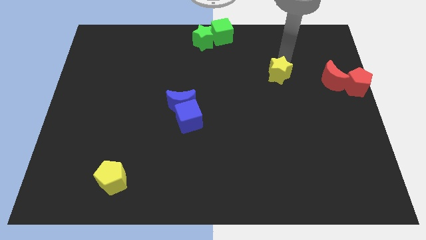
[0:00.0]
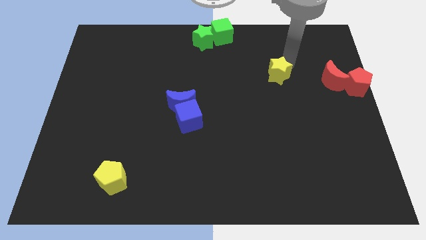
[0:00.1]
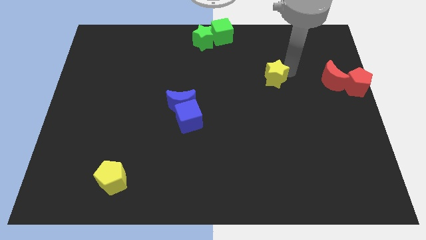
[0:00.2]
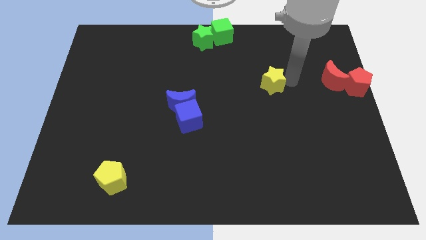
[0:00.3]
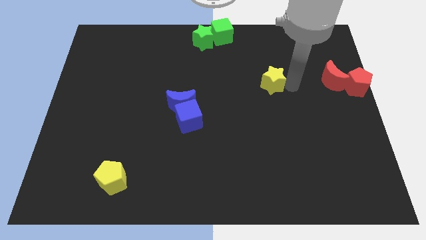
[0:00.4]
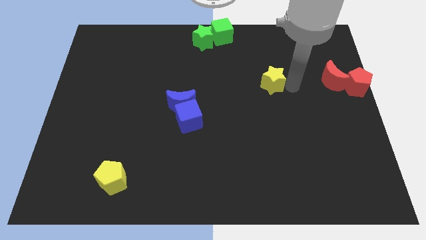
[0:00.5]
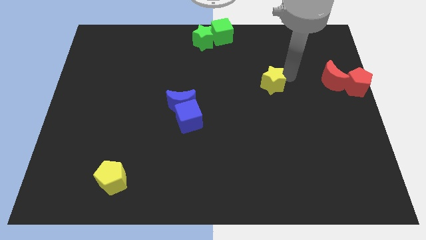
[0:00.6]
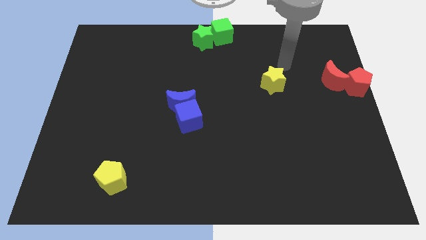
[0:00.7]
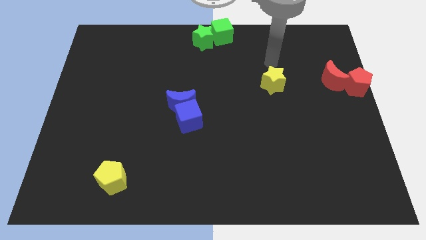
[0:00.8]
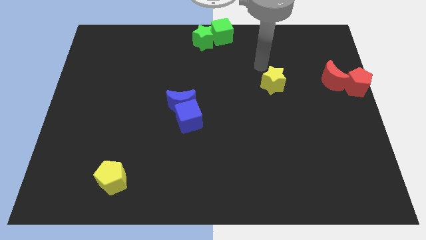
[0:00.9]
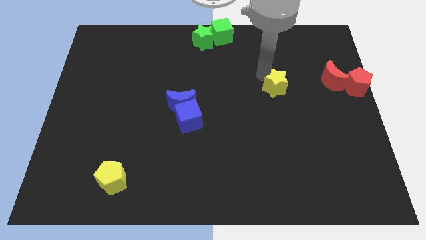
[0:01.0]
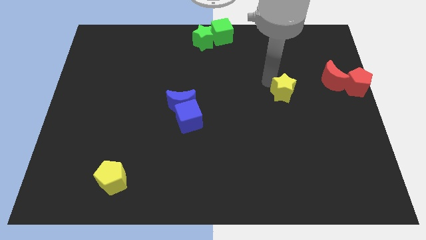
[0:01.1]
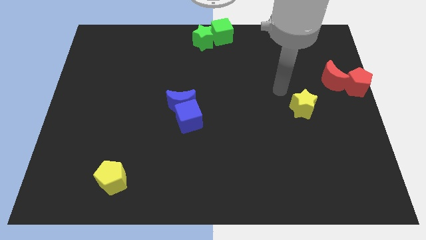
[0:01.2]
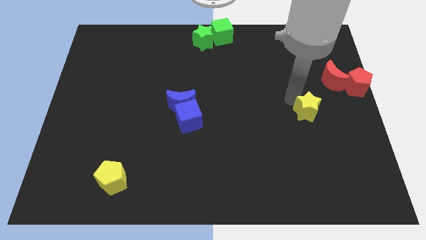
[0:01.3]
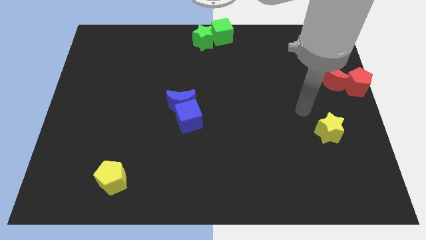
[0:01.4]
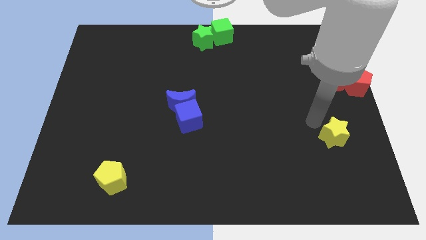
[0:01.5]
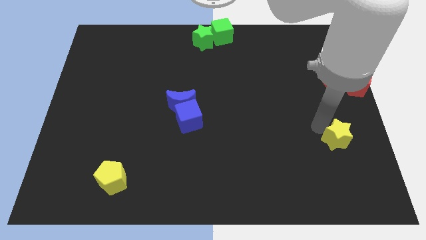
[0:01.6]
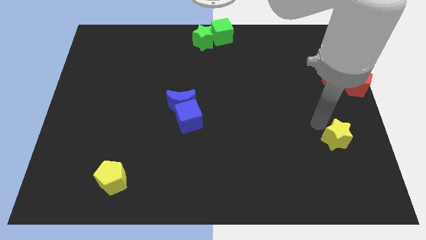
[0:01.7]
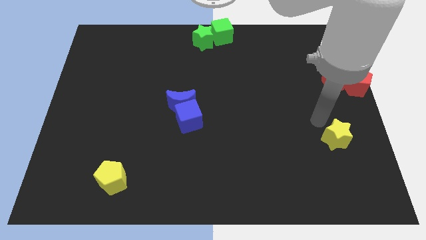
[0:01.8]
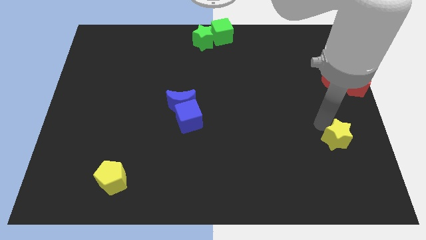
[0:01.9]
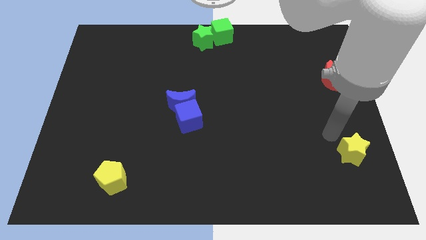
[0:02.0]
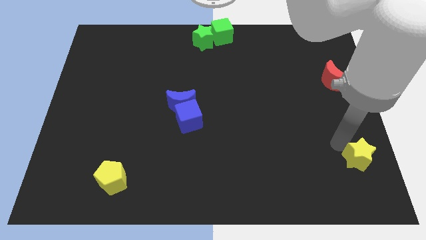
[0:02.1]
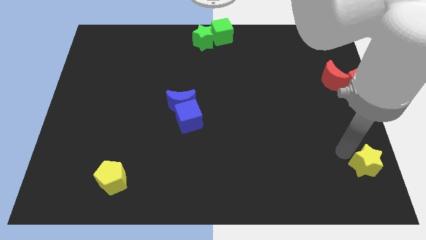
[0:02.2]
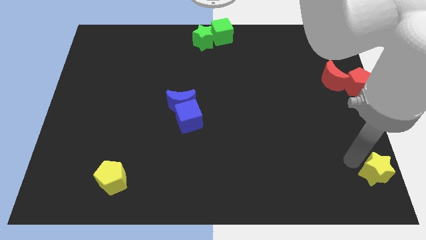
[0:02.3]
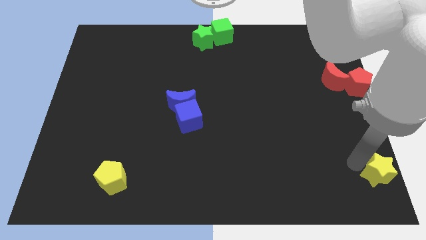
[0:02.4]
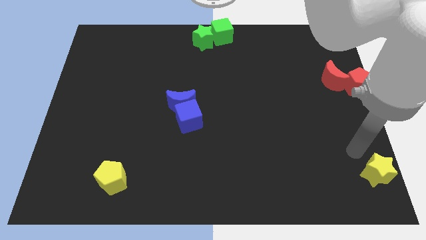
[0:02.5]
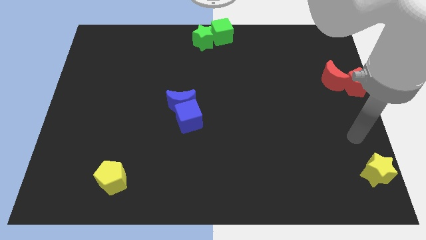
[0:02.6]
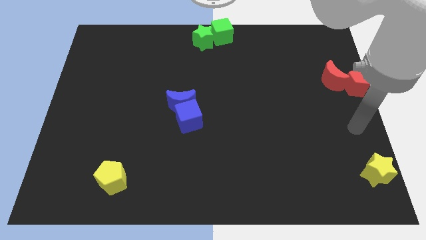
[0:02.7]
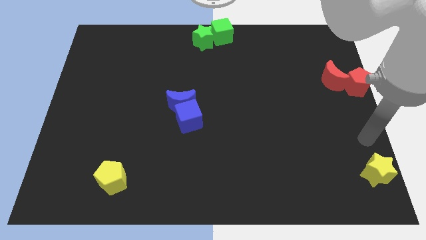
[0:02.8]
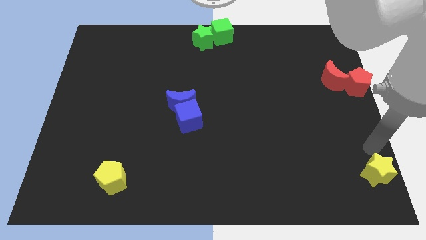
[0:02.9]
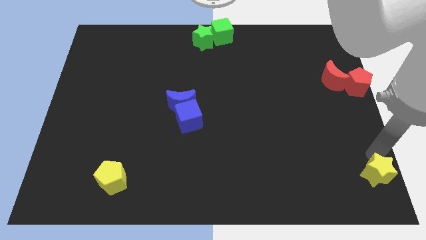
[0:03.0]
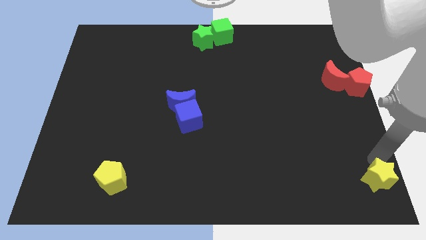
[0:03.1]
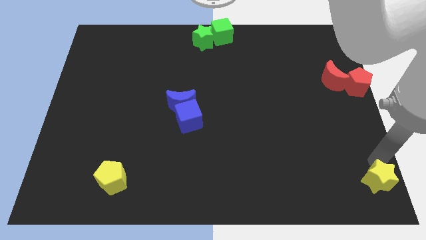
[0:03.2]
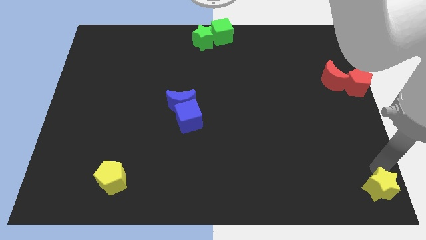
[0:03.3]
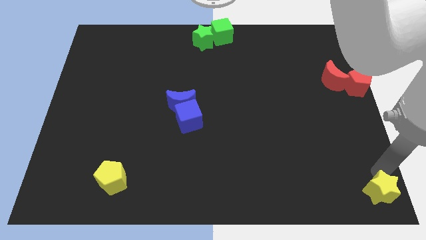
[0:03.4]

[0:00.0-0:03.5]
push the yellow star to the bottom right

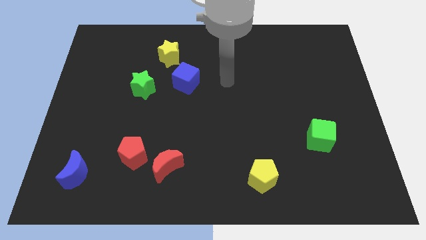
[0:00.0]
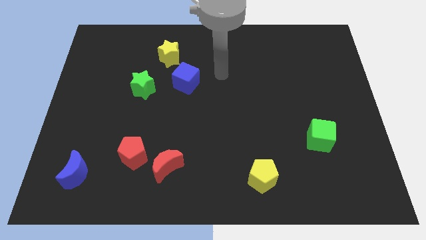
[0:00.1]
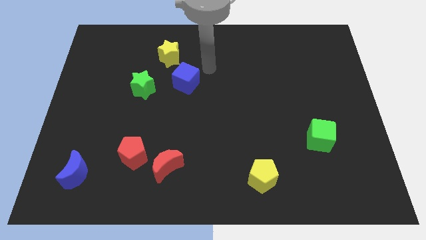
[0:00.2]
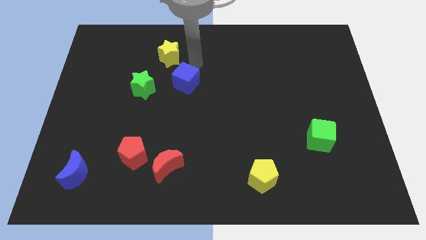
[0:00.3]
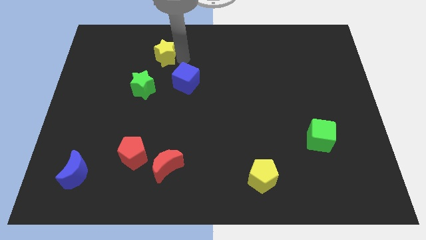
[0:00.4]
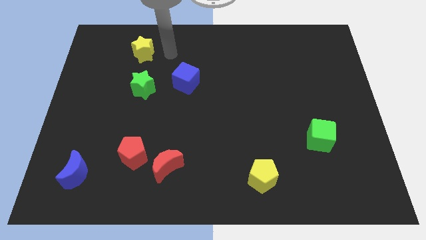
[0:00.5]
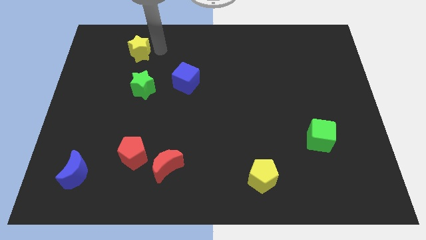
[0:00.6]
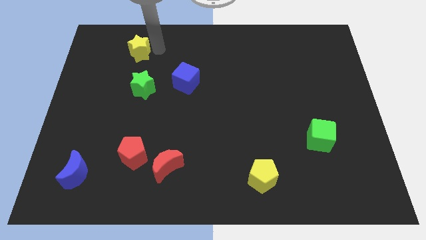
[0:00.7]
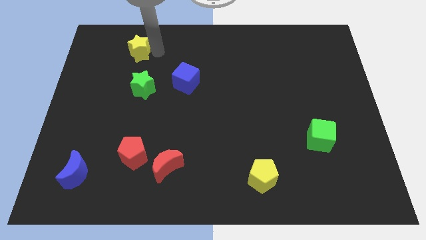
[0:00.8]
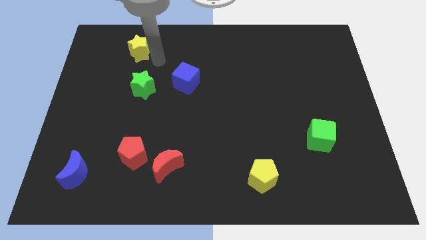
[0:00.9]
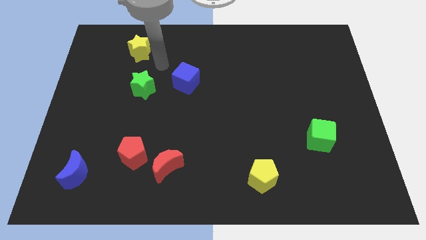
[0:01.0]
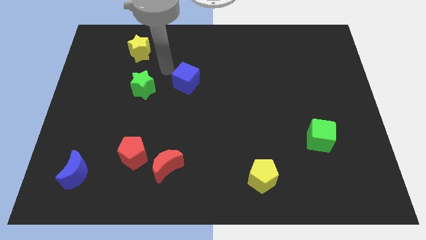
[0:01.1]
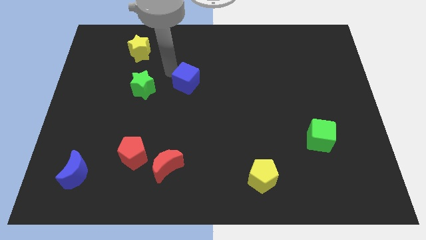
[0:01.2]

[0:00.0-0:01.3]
place the yellow star above green star

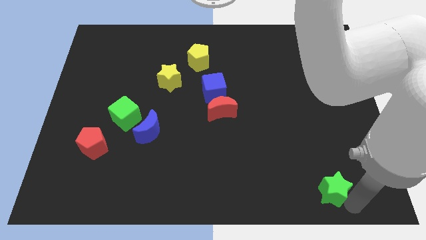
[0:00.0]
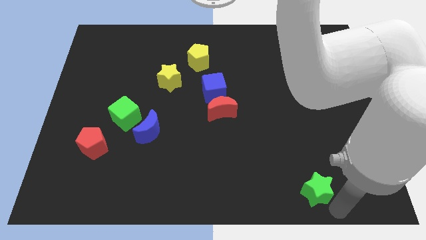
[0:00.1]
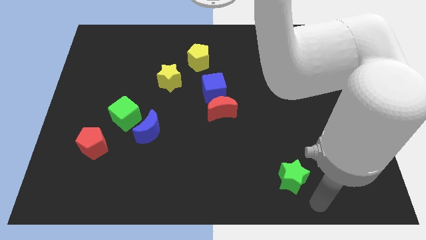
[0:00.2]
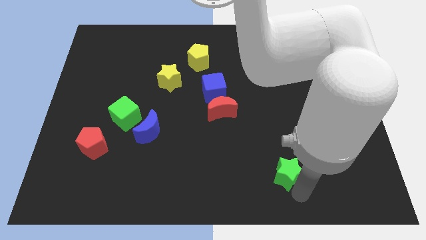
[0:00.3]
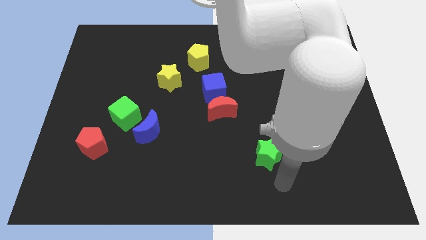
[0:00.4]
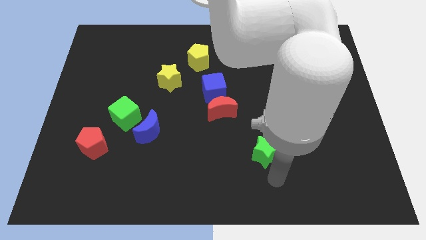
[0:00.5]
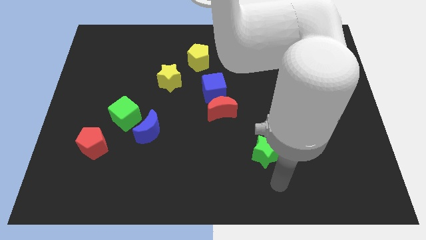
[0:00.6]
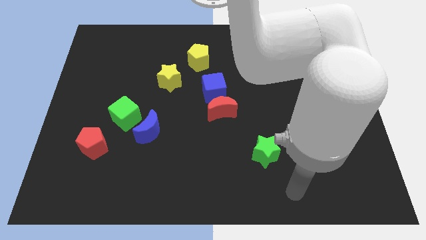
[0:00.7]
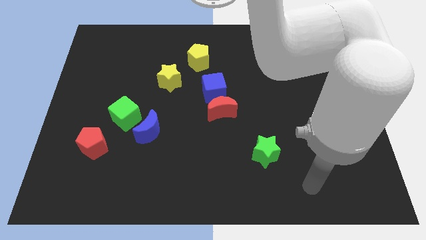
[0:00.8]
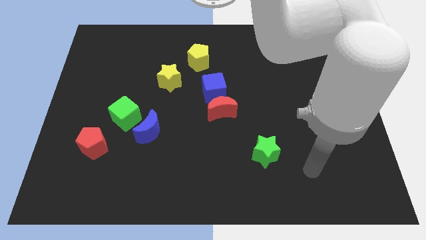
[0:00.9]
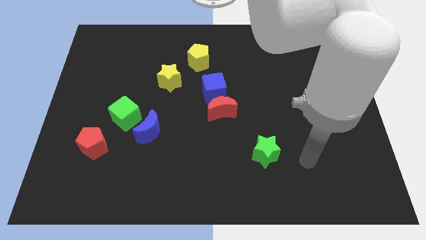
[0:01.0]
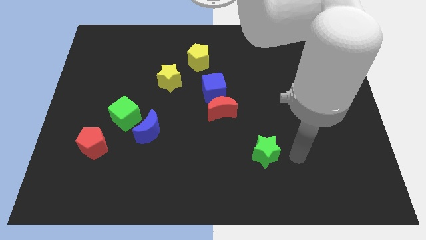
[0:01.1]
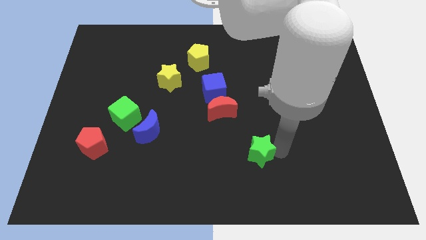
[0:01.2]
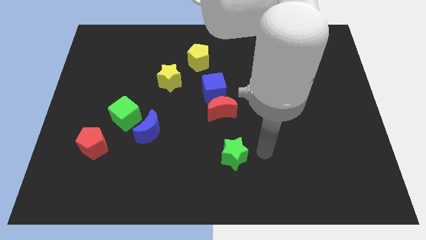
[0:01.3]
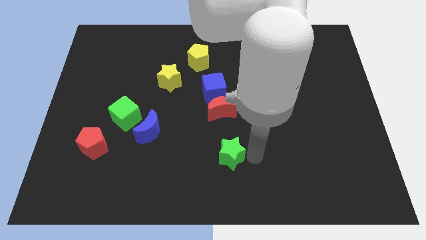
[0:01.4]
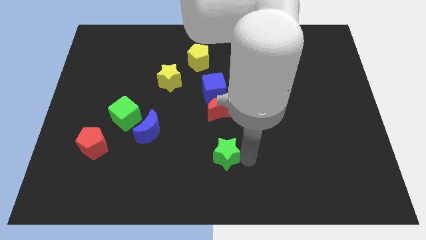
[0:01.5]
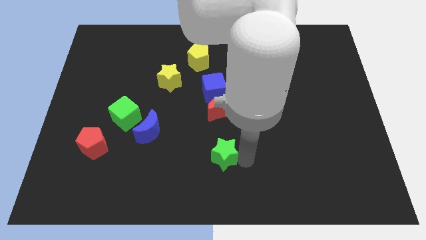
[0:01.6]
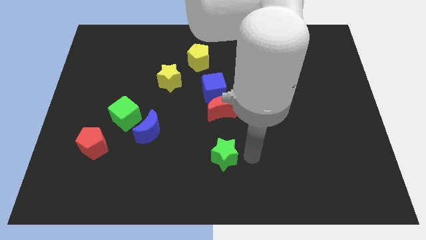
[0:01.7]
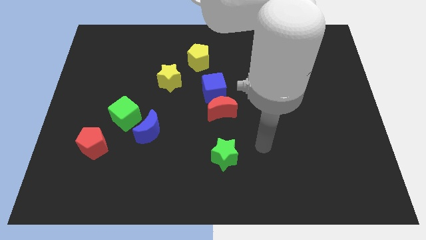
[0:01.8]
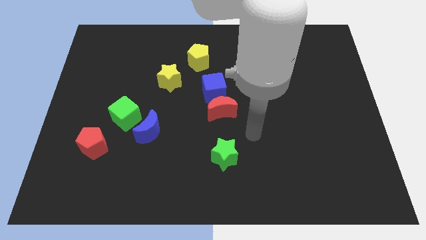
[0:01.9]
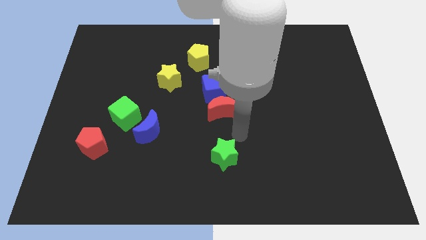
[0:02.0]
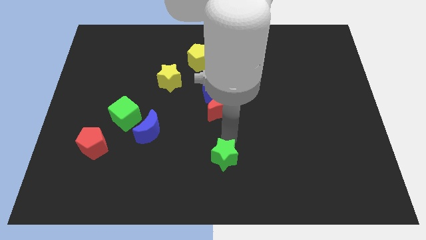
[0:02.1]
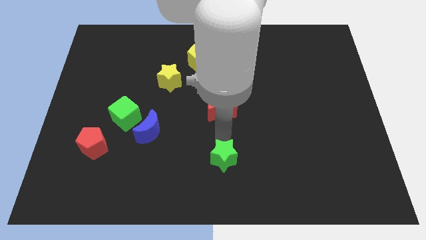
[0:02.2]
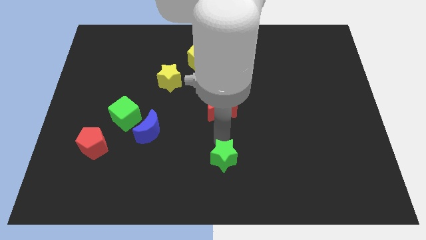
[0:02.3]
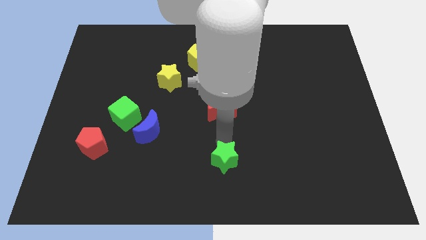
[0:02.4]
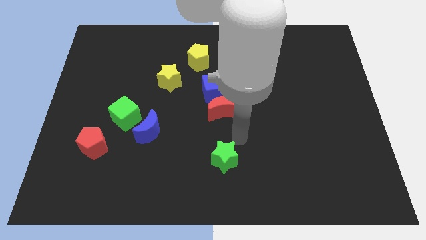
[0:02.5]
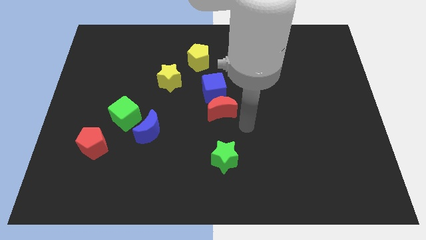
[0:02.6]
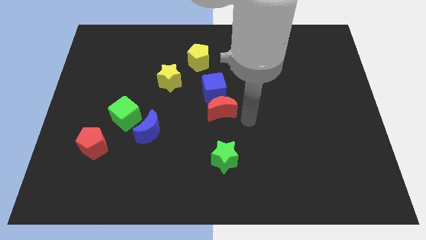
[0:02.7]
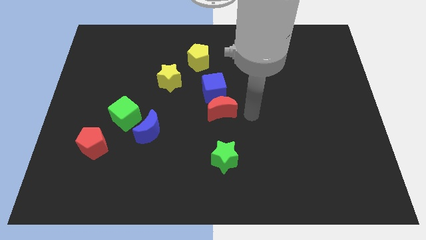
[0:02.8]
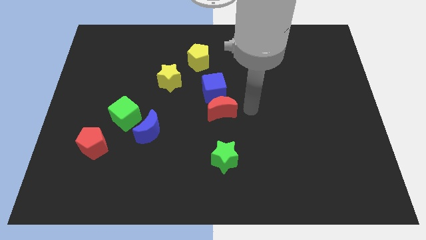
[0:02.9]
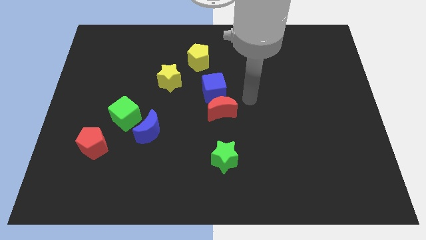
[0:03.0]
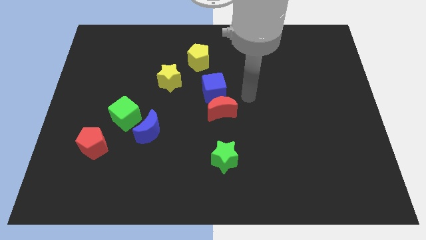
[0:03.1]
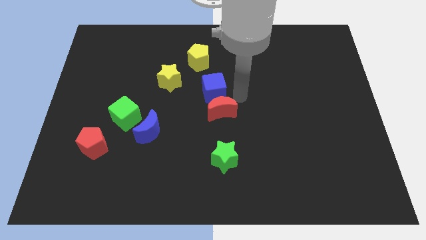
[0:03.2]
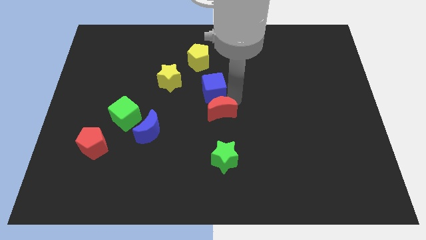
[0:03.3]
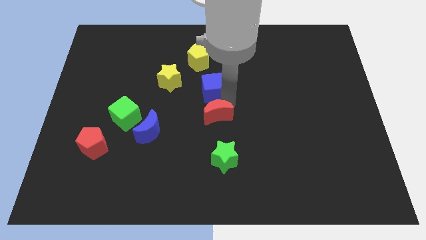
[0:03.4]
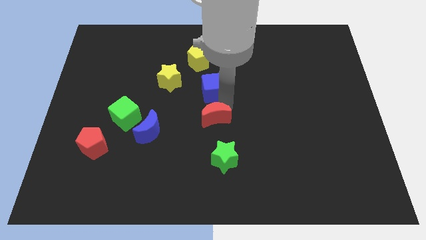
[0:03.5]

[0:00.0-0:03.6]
place the green star below the red moon

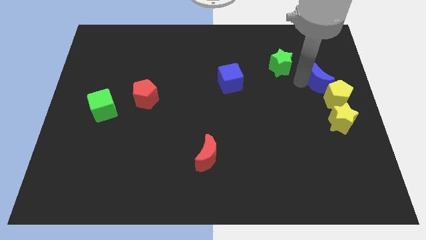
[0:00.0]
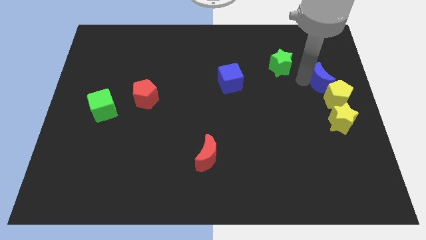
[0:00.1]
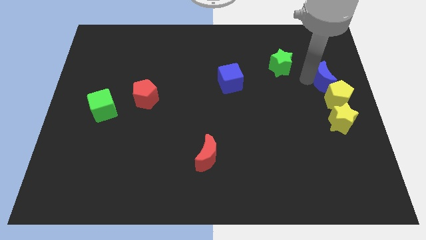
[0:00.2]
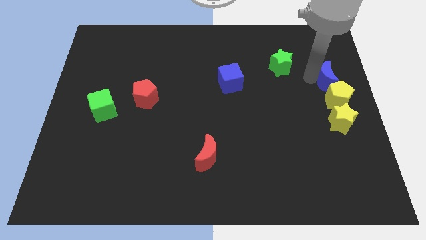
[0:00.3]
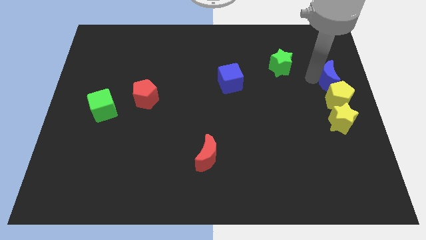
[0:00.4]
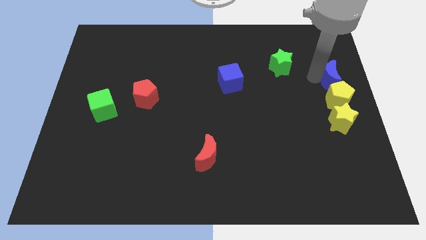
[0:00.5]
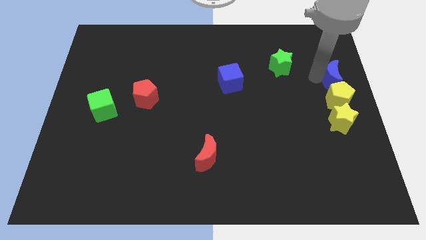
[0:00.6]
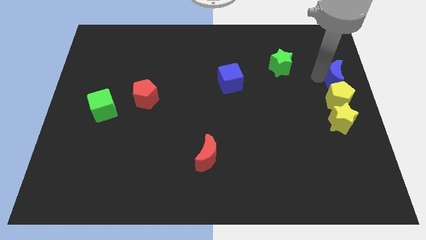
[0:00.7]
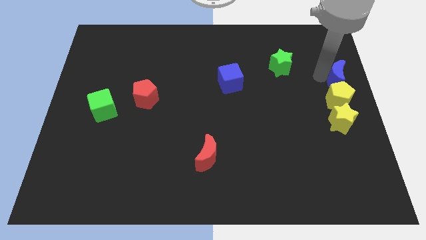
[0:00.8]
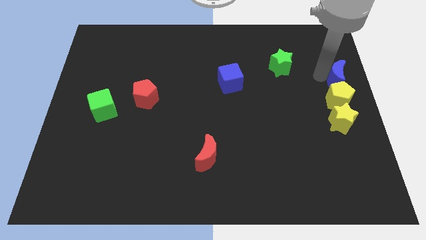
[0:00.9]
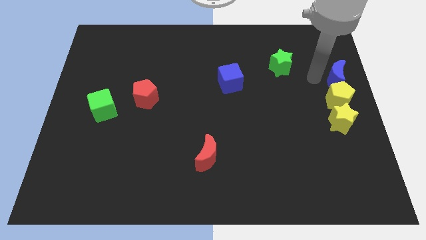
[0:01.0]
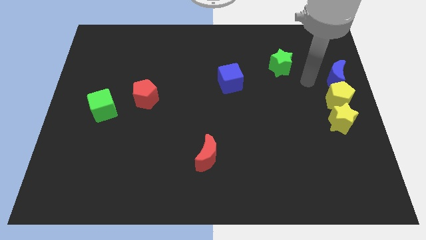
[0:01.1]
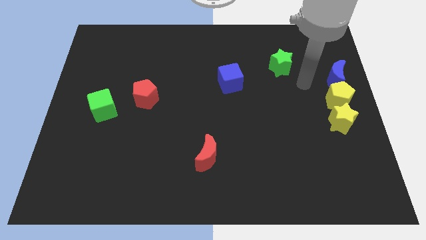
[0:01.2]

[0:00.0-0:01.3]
slightly push the blue crescent above to the yellow pentagon
